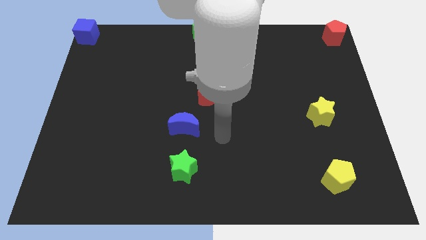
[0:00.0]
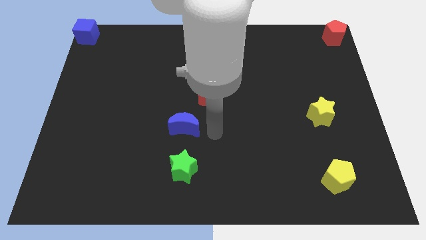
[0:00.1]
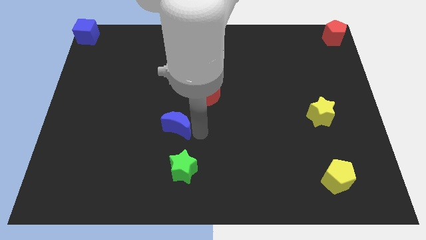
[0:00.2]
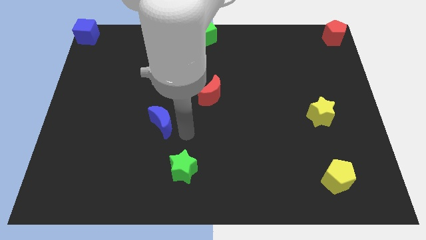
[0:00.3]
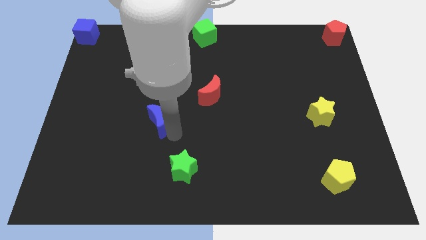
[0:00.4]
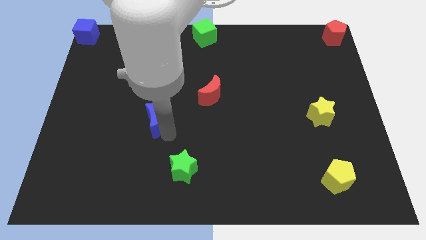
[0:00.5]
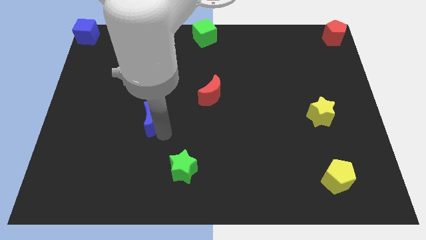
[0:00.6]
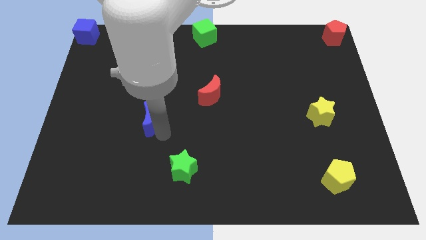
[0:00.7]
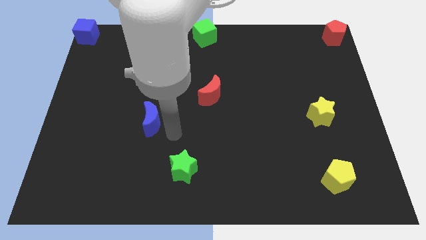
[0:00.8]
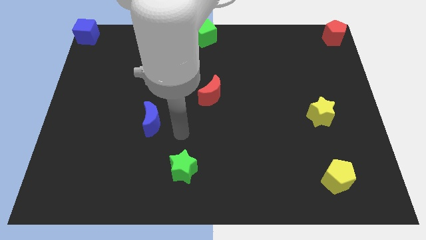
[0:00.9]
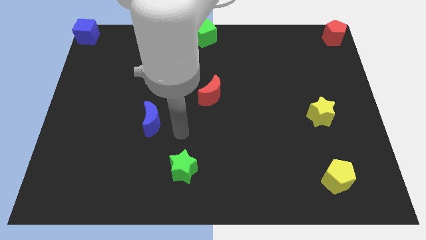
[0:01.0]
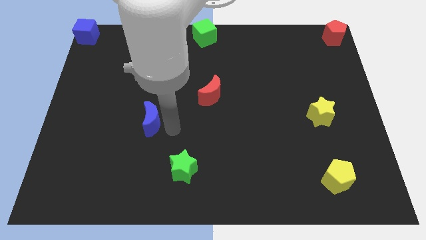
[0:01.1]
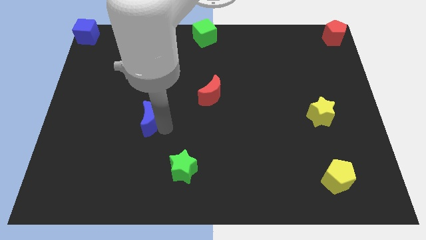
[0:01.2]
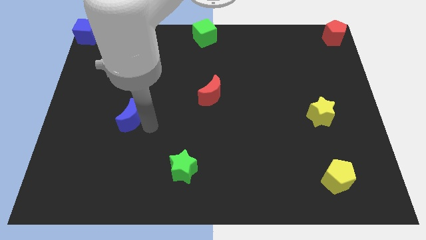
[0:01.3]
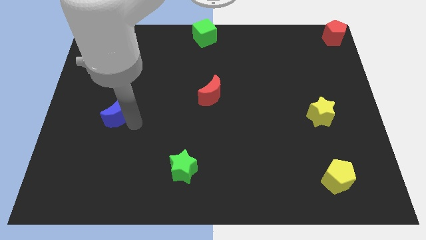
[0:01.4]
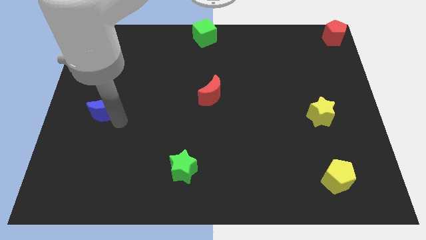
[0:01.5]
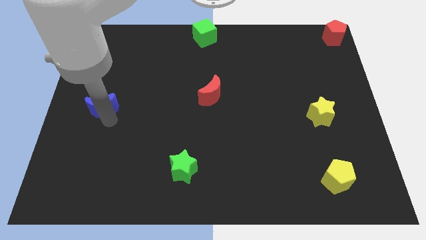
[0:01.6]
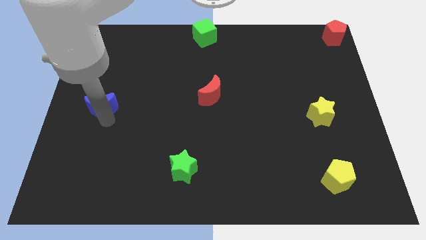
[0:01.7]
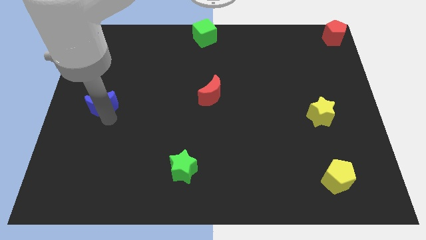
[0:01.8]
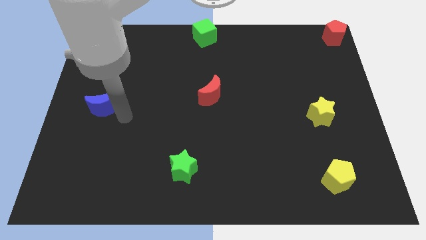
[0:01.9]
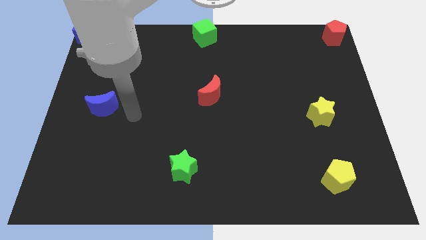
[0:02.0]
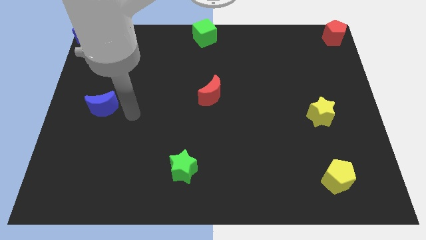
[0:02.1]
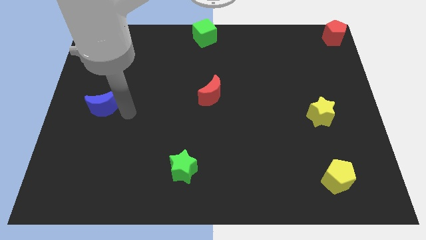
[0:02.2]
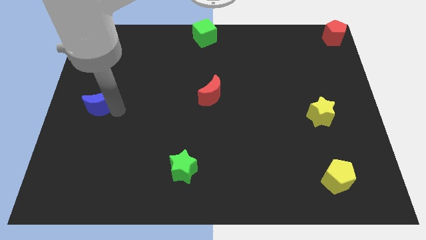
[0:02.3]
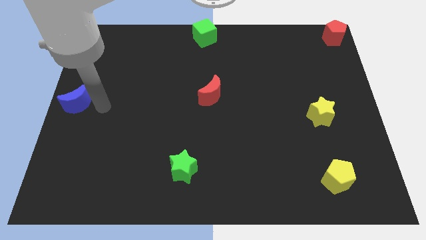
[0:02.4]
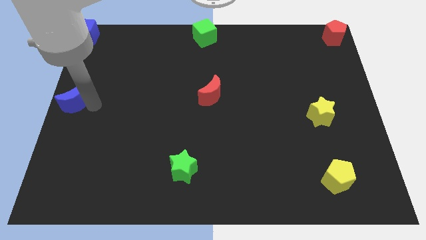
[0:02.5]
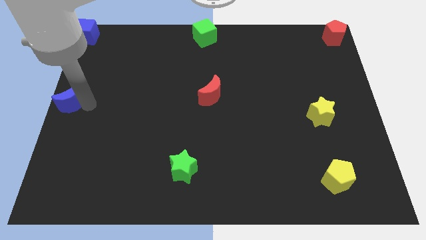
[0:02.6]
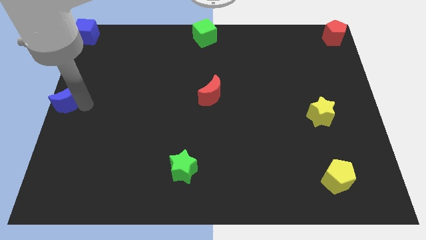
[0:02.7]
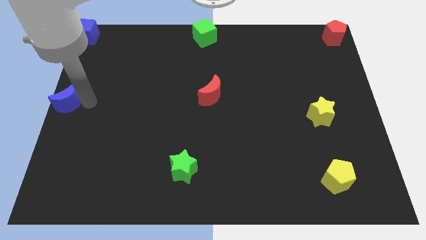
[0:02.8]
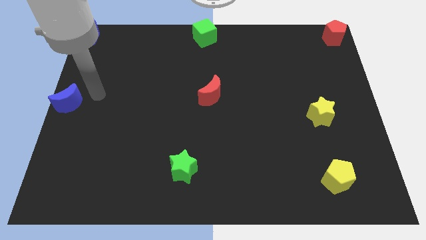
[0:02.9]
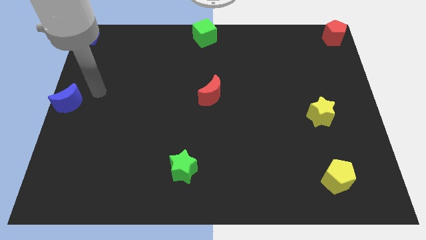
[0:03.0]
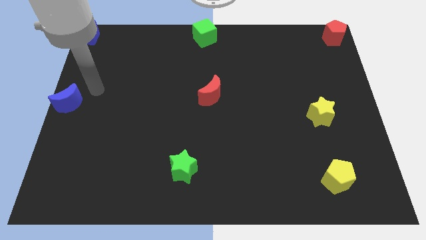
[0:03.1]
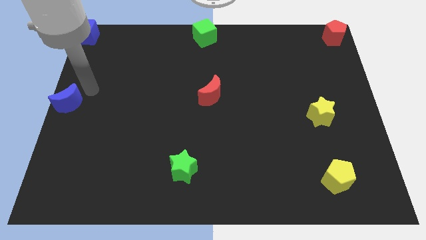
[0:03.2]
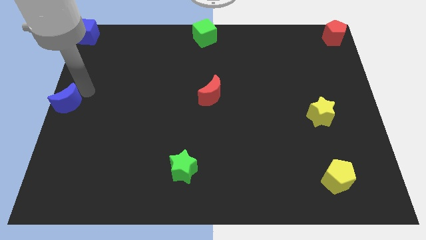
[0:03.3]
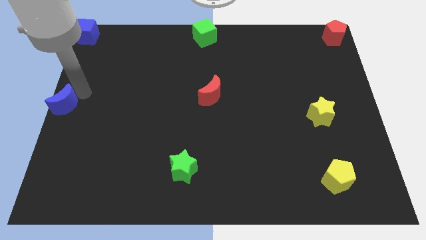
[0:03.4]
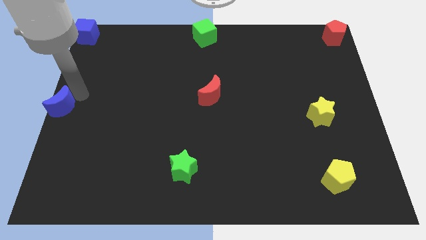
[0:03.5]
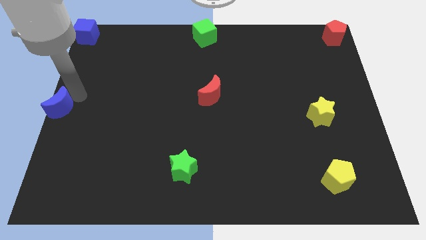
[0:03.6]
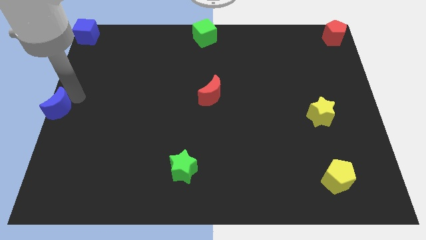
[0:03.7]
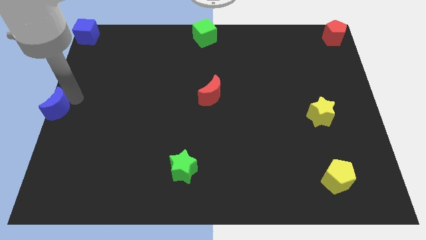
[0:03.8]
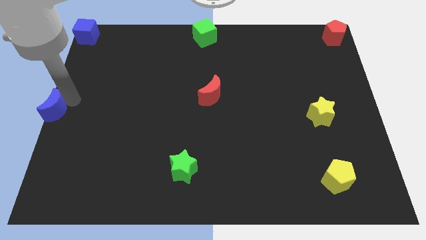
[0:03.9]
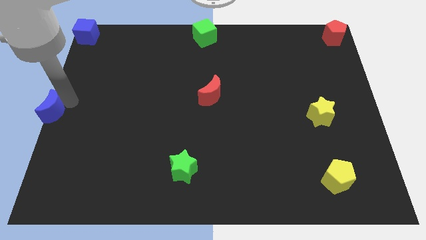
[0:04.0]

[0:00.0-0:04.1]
move blue moon in the center left

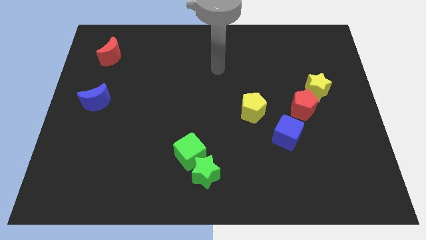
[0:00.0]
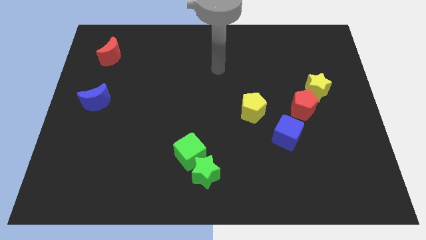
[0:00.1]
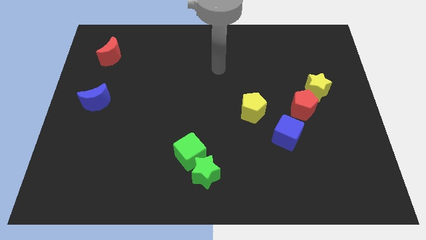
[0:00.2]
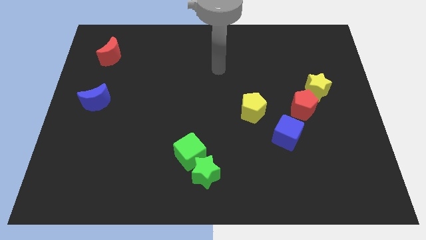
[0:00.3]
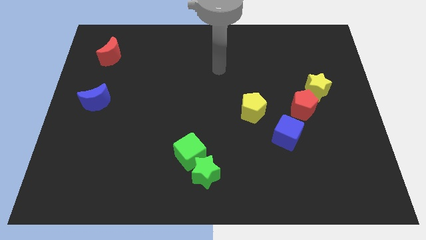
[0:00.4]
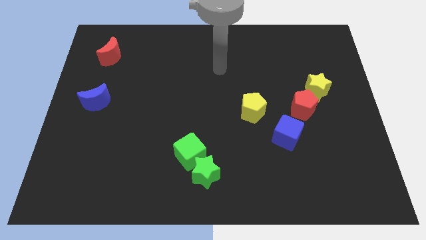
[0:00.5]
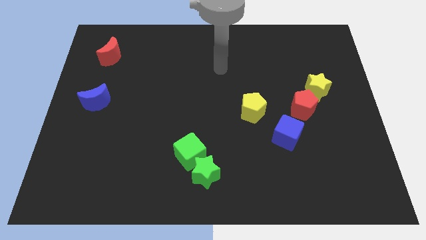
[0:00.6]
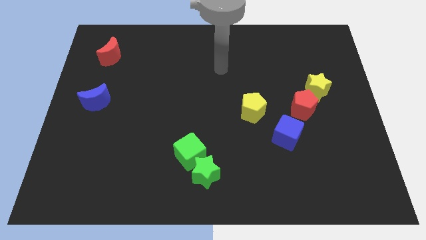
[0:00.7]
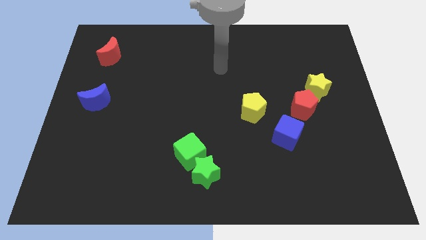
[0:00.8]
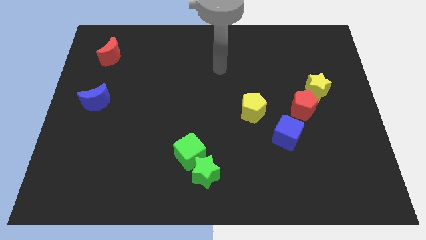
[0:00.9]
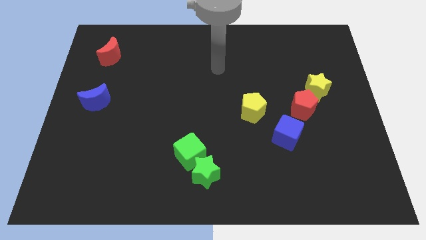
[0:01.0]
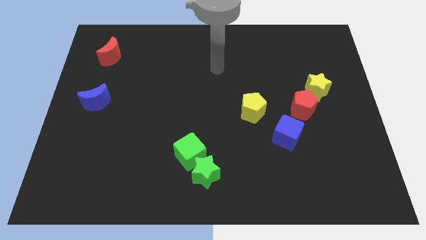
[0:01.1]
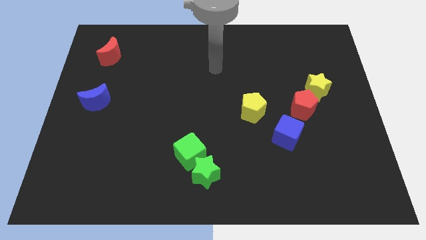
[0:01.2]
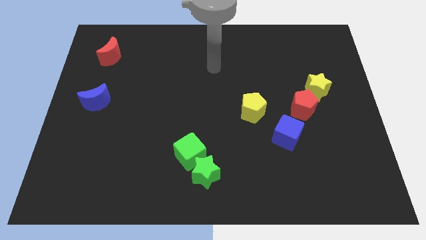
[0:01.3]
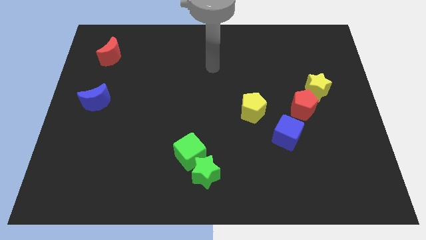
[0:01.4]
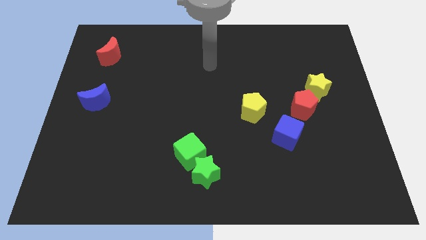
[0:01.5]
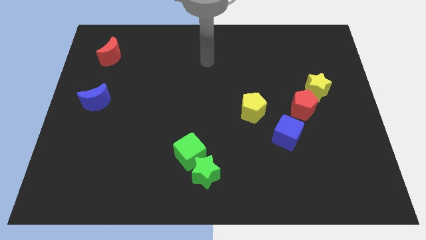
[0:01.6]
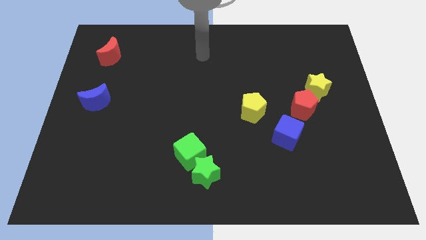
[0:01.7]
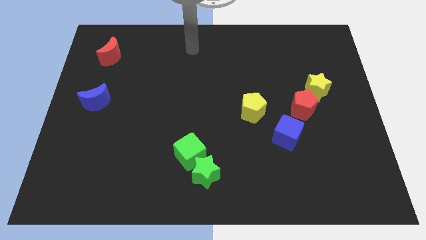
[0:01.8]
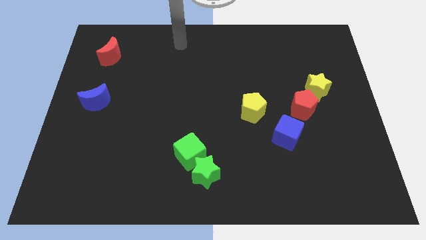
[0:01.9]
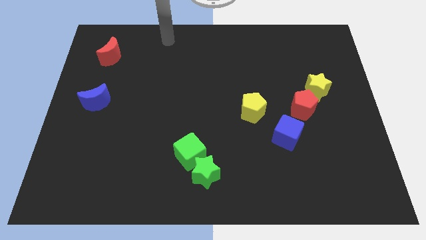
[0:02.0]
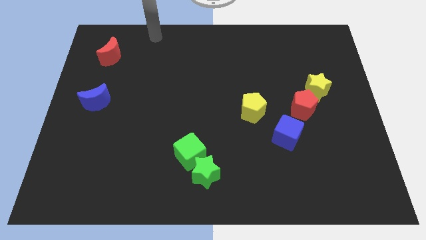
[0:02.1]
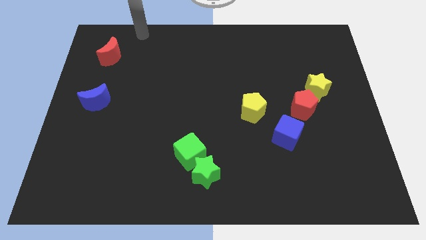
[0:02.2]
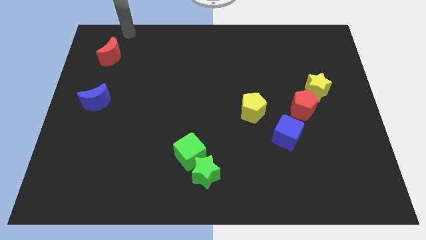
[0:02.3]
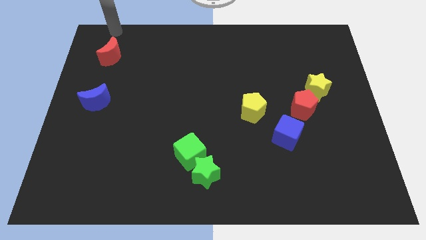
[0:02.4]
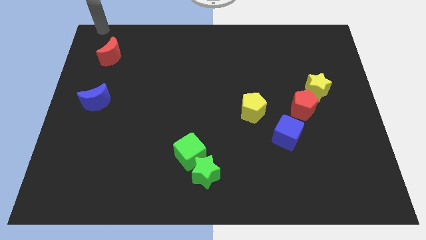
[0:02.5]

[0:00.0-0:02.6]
place your arm to the top of the red moon

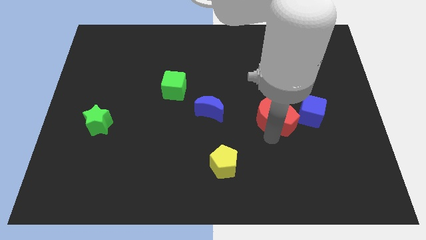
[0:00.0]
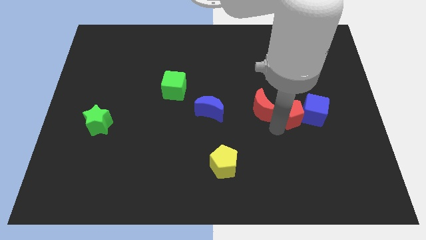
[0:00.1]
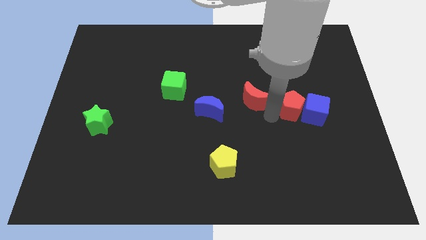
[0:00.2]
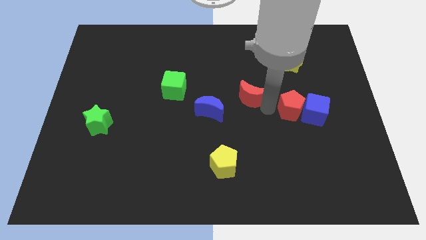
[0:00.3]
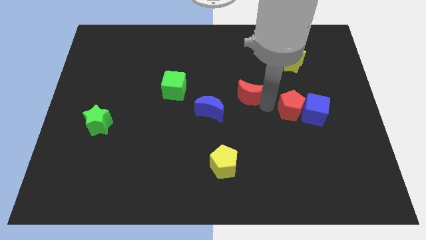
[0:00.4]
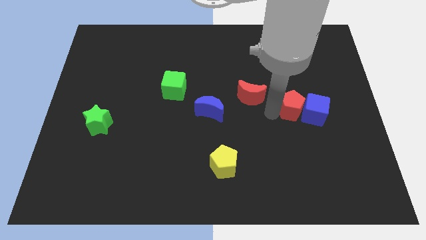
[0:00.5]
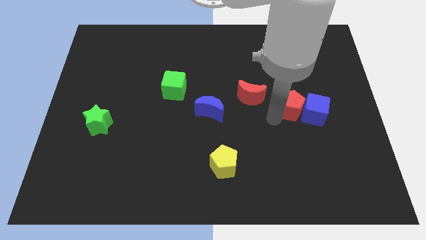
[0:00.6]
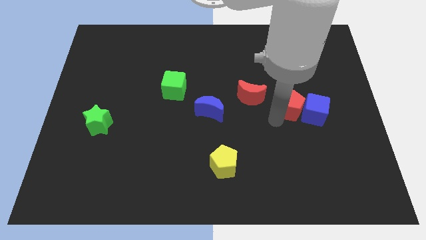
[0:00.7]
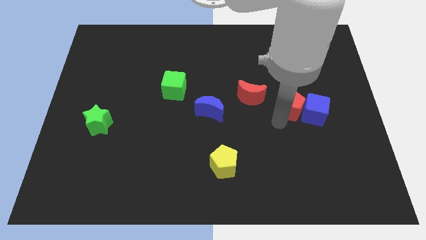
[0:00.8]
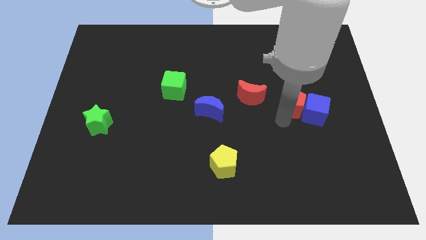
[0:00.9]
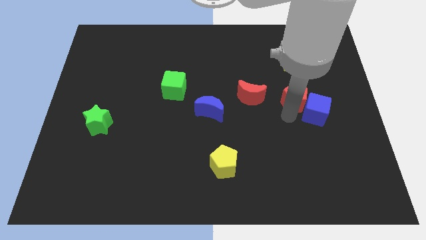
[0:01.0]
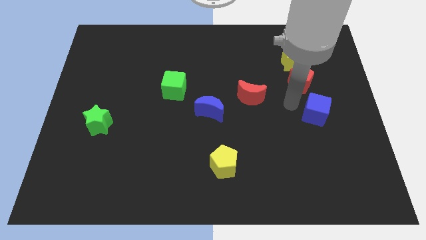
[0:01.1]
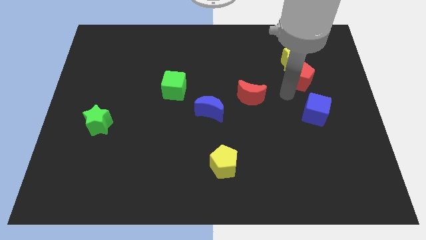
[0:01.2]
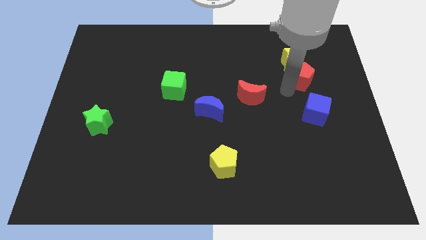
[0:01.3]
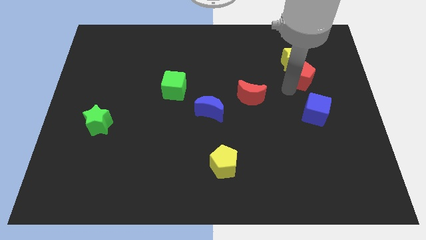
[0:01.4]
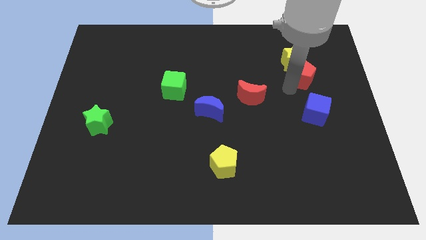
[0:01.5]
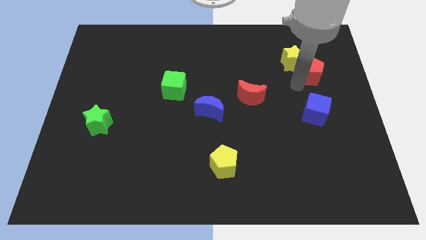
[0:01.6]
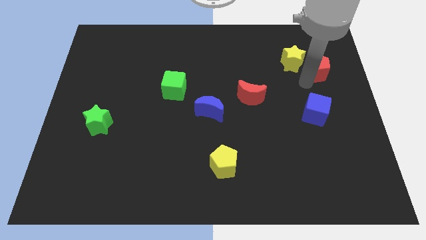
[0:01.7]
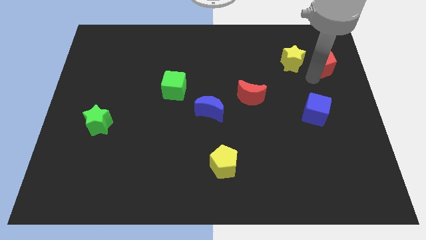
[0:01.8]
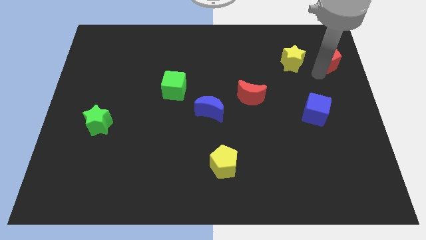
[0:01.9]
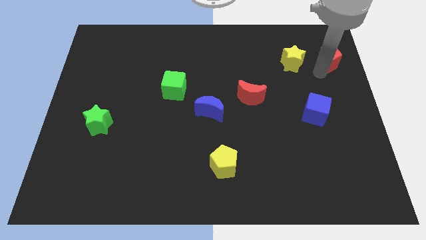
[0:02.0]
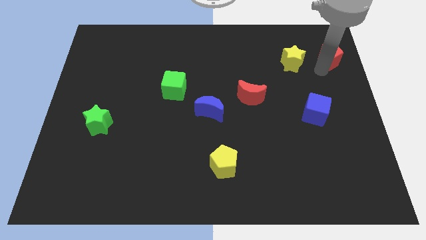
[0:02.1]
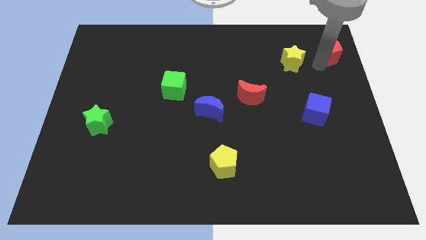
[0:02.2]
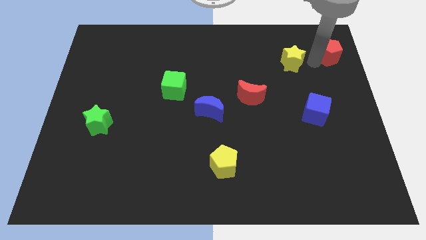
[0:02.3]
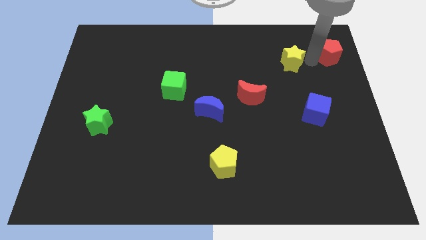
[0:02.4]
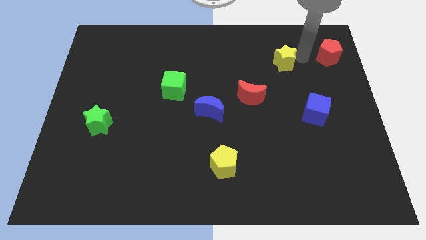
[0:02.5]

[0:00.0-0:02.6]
move the red pentagon to the right of the yellow star
